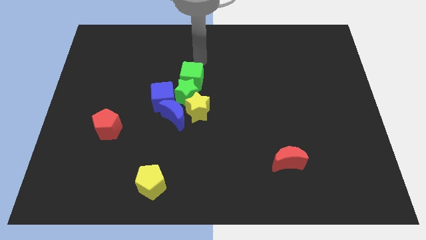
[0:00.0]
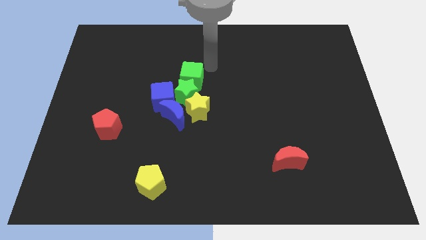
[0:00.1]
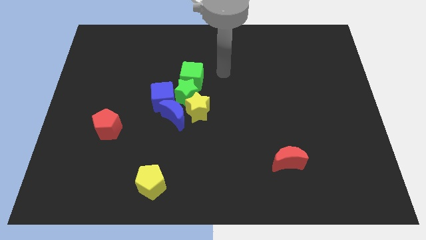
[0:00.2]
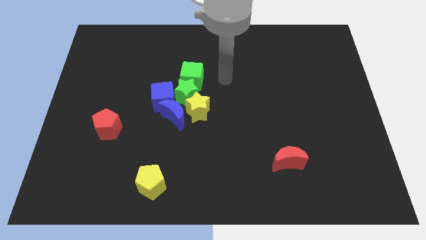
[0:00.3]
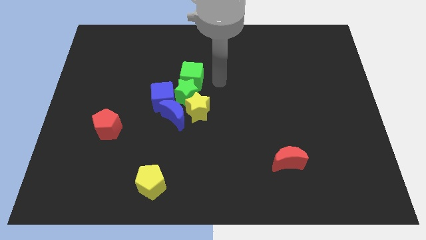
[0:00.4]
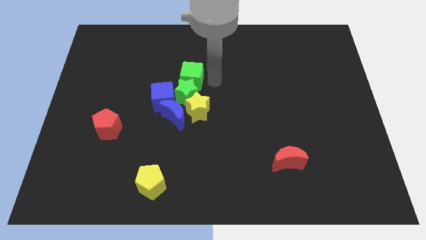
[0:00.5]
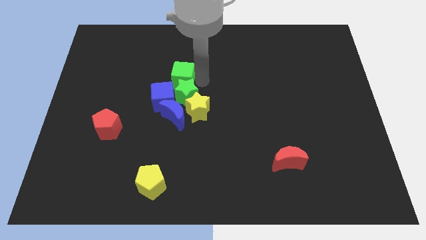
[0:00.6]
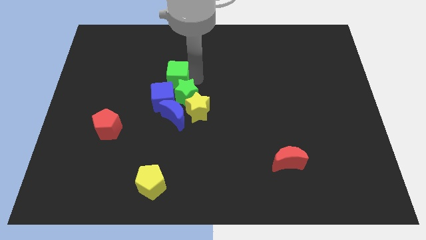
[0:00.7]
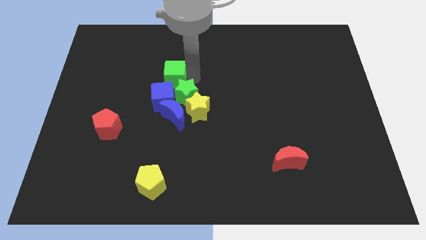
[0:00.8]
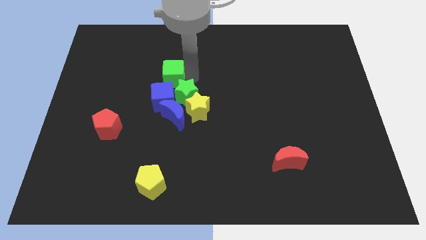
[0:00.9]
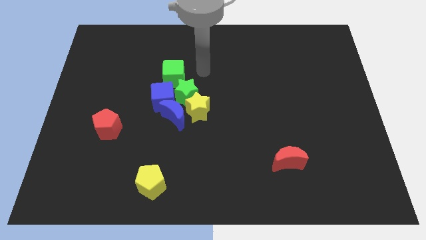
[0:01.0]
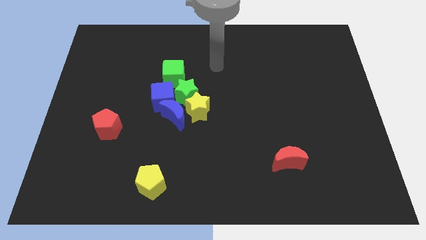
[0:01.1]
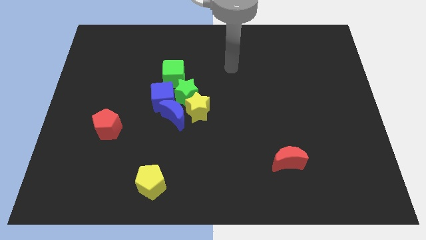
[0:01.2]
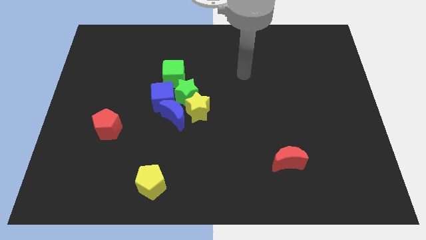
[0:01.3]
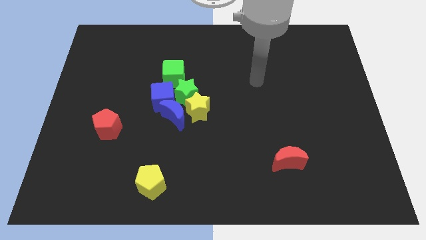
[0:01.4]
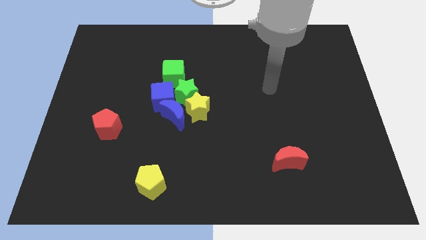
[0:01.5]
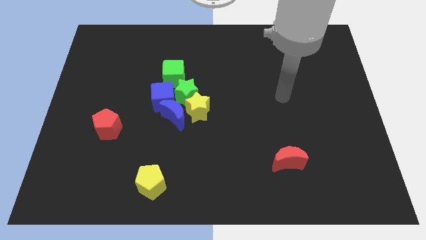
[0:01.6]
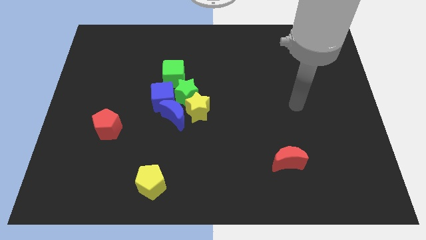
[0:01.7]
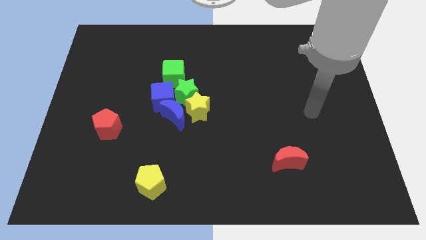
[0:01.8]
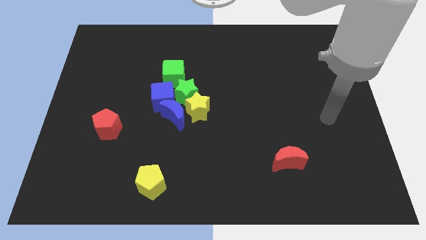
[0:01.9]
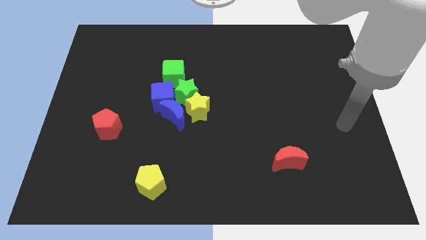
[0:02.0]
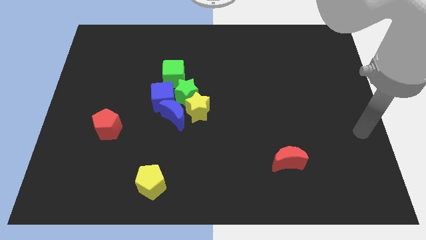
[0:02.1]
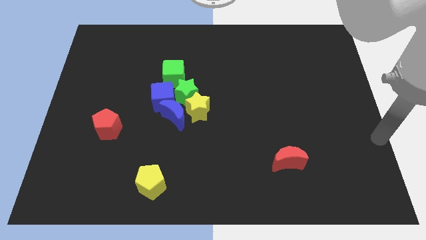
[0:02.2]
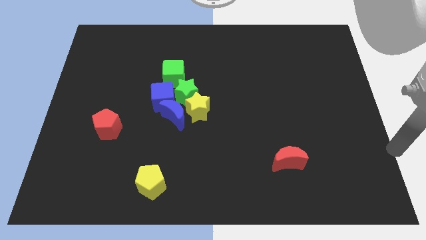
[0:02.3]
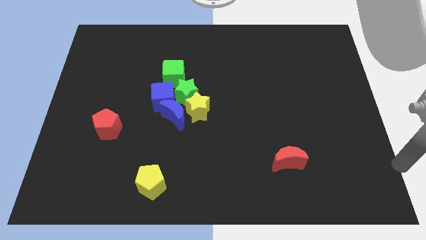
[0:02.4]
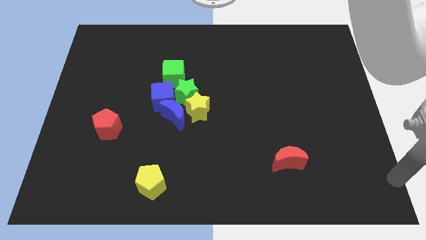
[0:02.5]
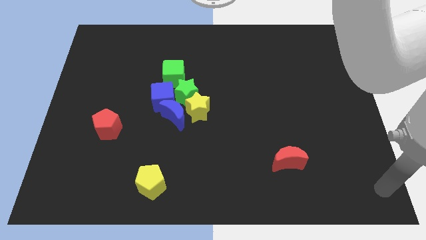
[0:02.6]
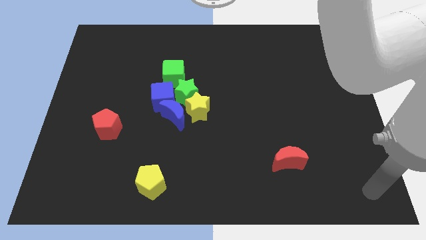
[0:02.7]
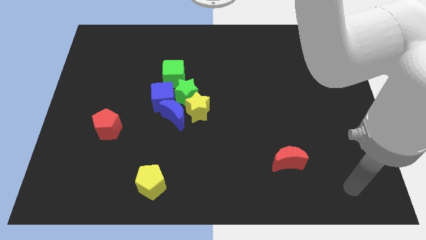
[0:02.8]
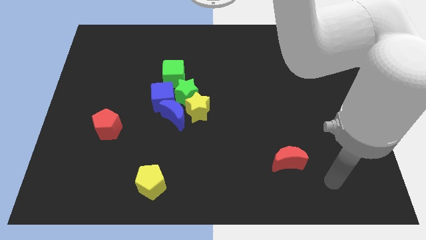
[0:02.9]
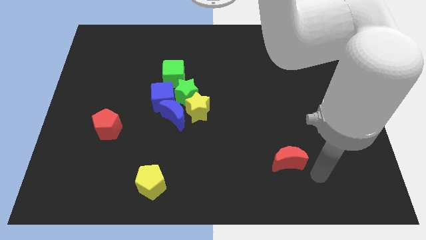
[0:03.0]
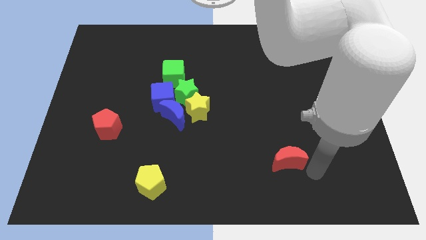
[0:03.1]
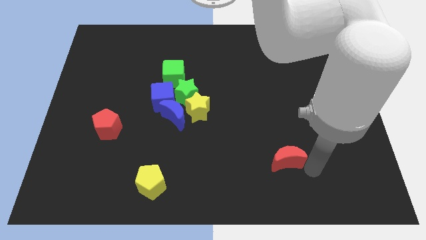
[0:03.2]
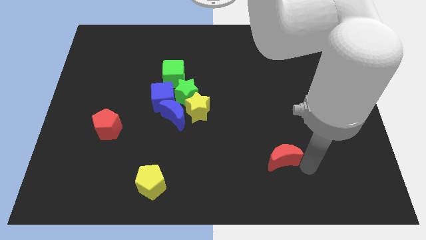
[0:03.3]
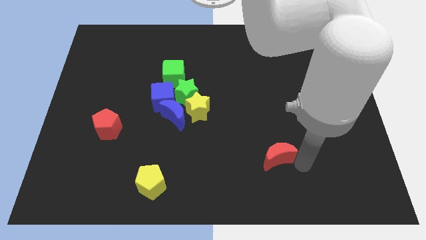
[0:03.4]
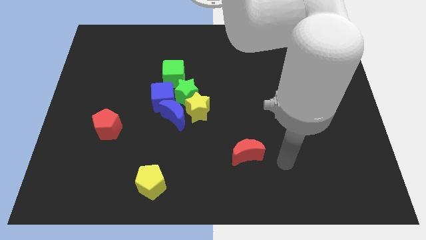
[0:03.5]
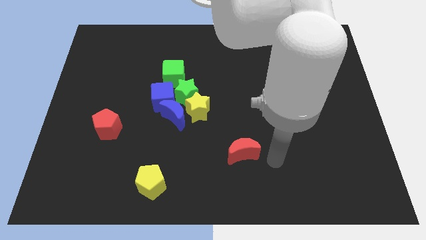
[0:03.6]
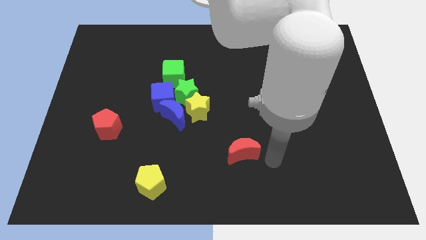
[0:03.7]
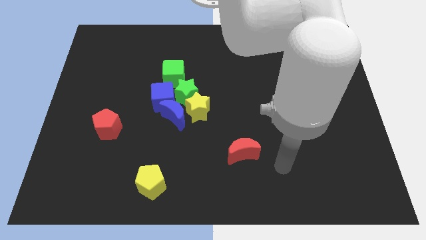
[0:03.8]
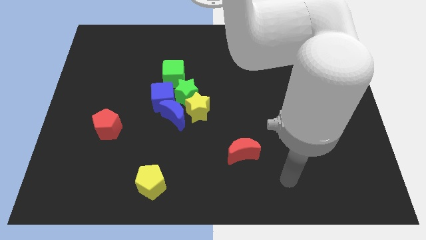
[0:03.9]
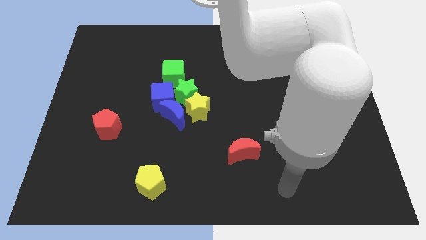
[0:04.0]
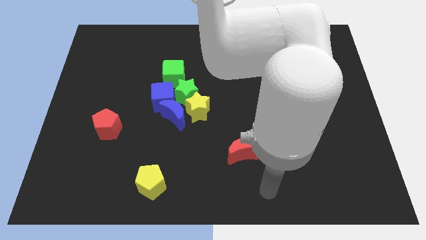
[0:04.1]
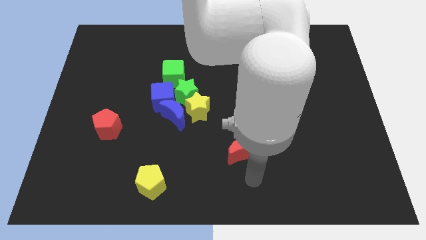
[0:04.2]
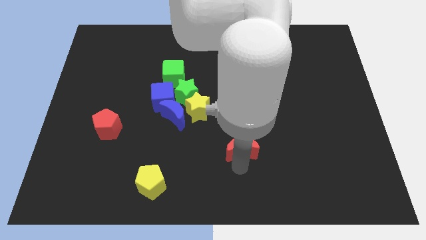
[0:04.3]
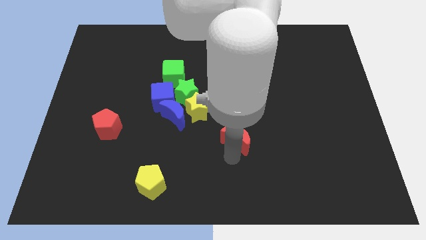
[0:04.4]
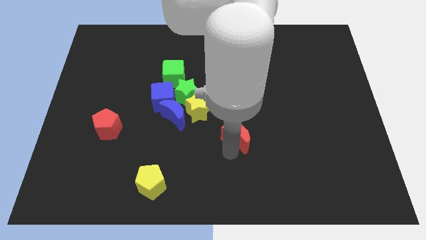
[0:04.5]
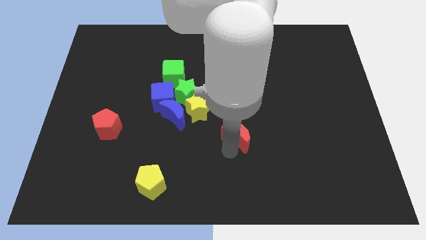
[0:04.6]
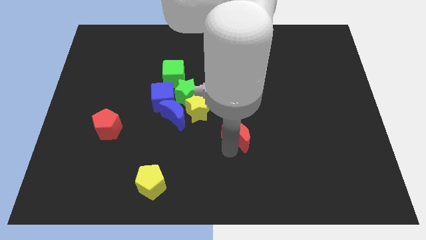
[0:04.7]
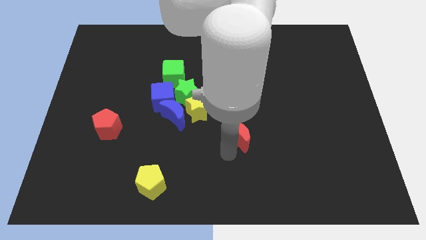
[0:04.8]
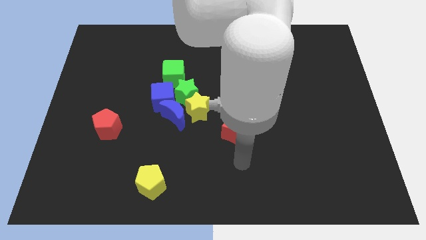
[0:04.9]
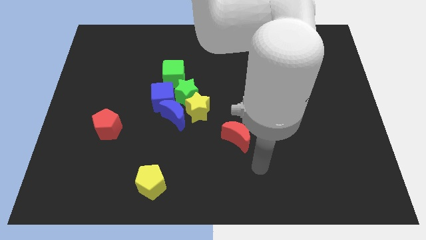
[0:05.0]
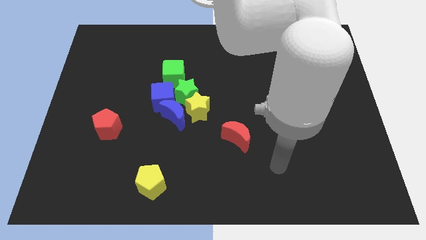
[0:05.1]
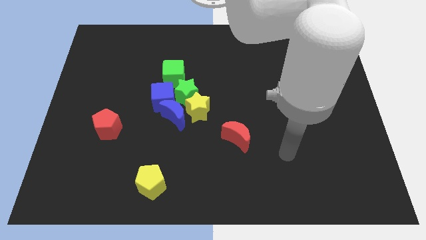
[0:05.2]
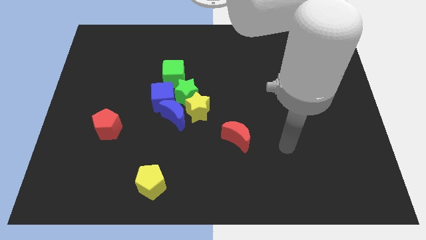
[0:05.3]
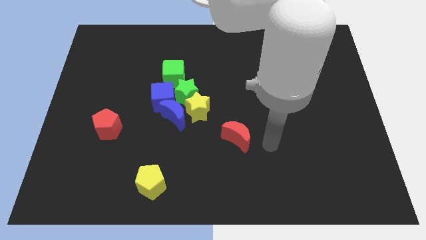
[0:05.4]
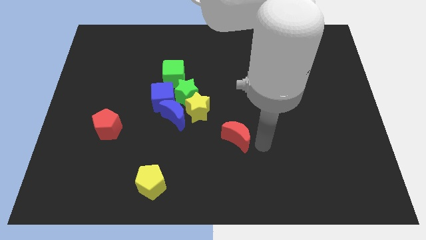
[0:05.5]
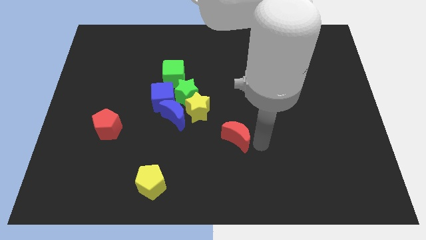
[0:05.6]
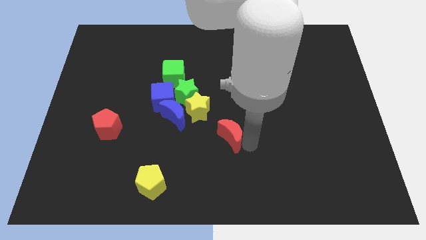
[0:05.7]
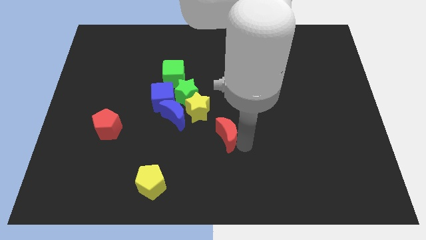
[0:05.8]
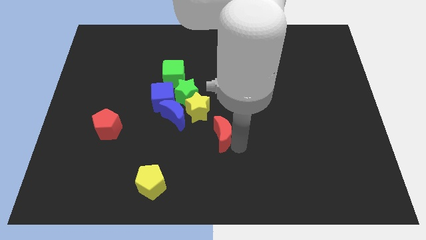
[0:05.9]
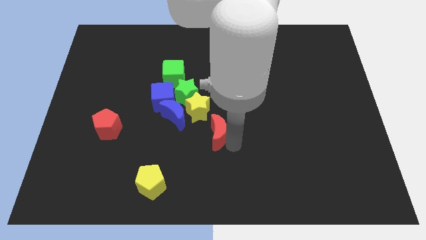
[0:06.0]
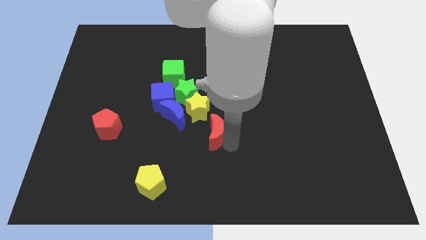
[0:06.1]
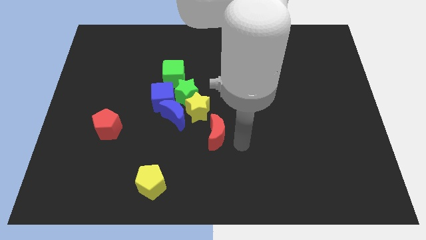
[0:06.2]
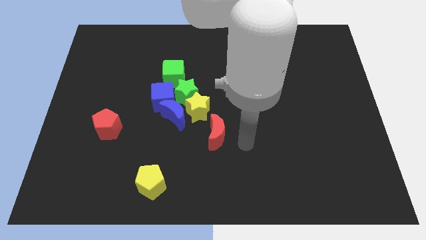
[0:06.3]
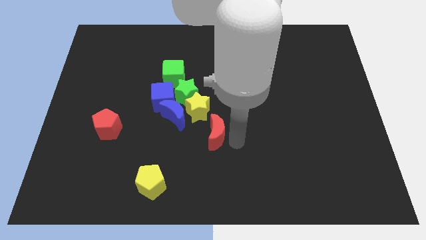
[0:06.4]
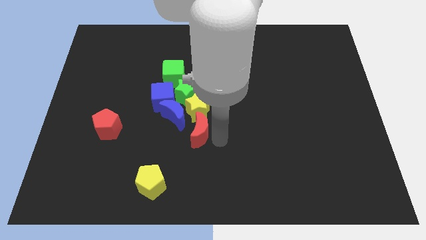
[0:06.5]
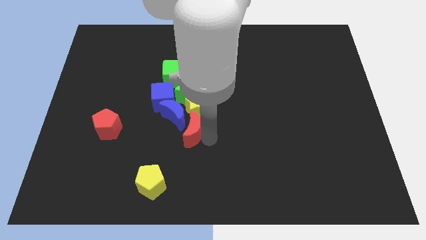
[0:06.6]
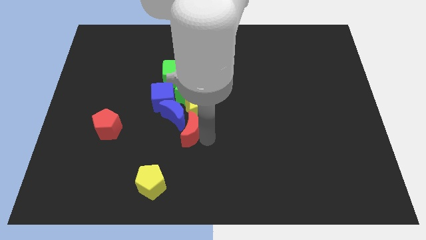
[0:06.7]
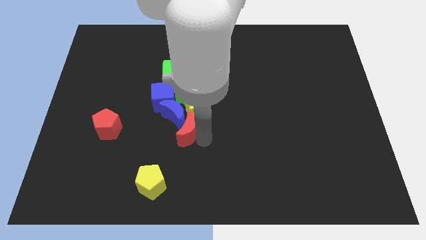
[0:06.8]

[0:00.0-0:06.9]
move the red moon below the blue moon

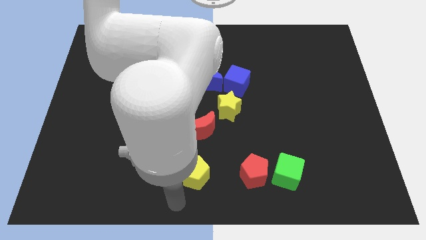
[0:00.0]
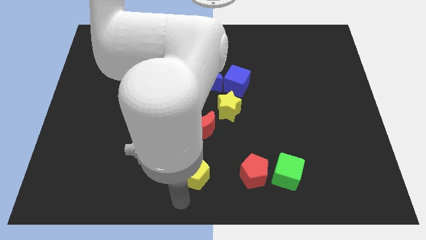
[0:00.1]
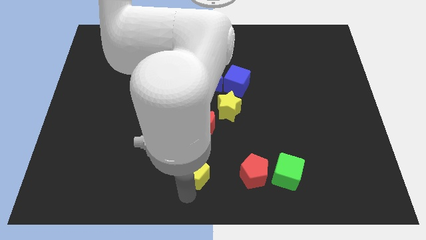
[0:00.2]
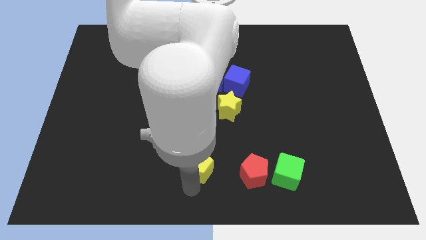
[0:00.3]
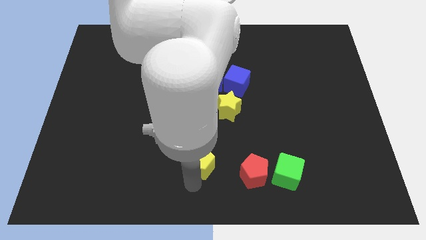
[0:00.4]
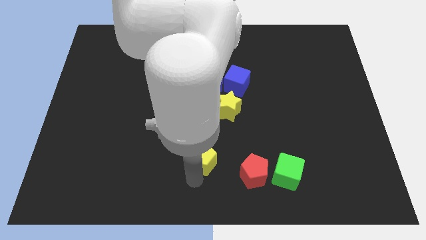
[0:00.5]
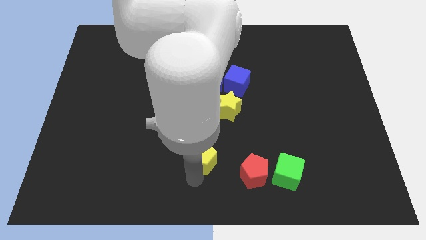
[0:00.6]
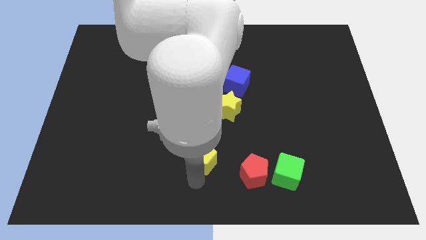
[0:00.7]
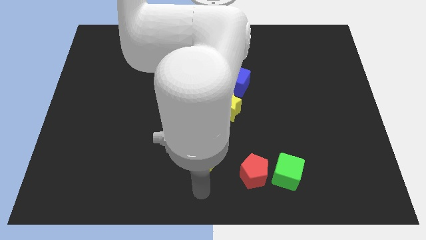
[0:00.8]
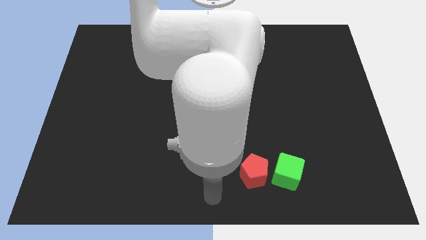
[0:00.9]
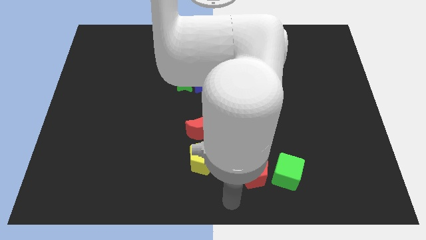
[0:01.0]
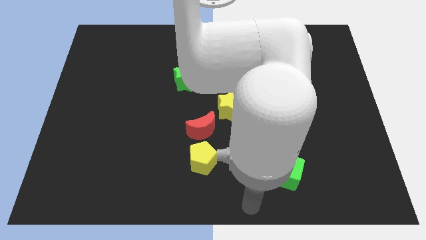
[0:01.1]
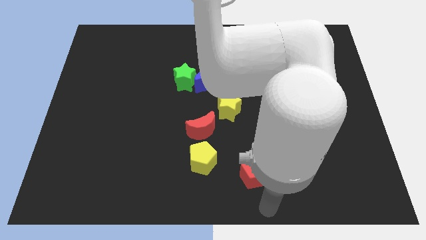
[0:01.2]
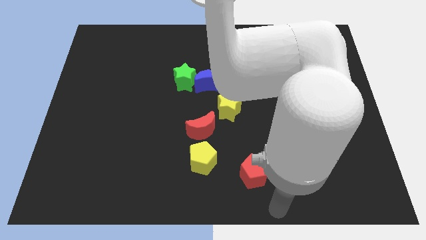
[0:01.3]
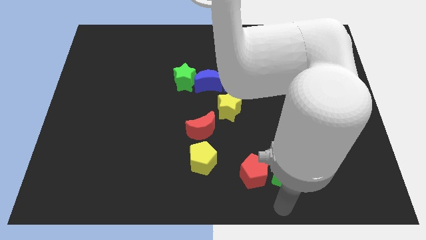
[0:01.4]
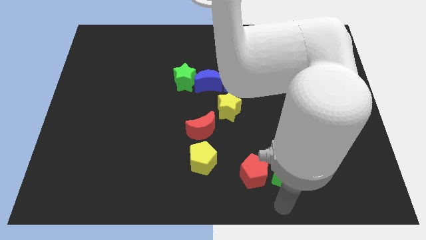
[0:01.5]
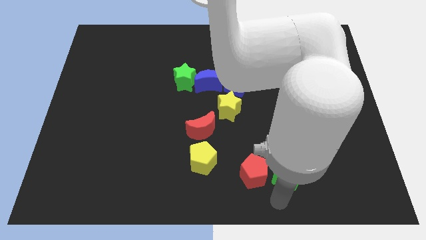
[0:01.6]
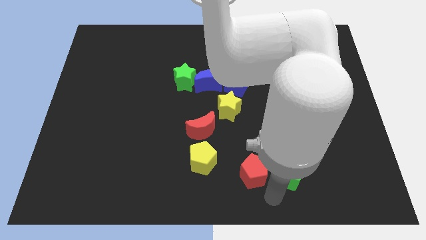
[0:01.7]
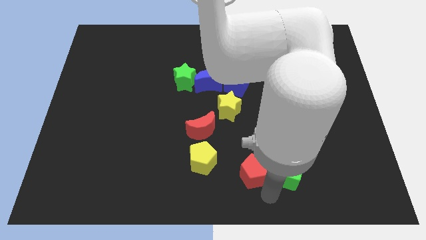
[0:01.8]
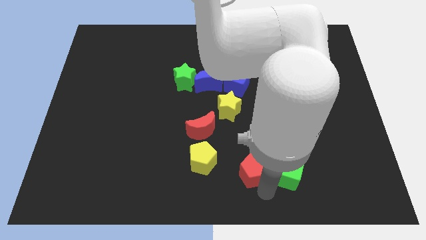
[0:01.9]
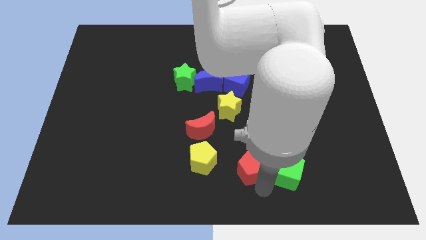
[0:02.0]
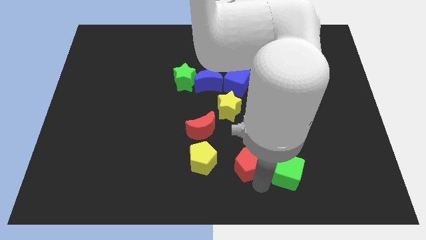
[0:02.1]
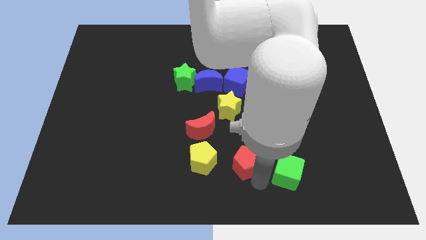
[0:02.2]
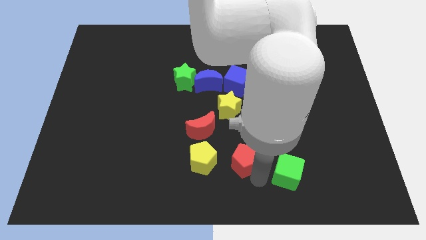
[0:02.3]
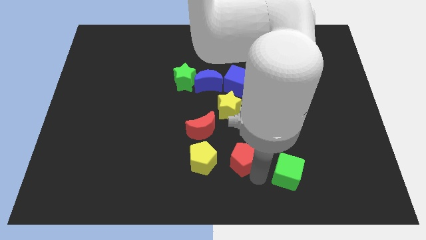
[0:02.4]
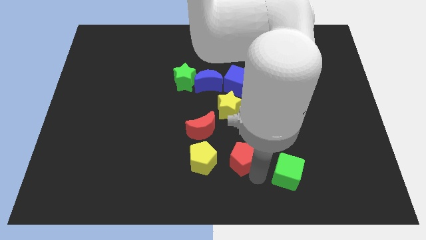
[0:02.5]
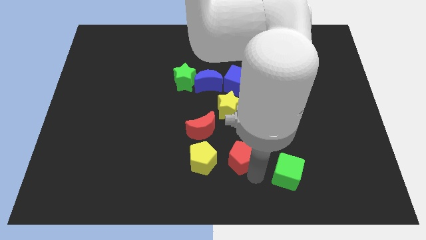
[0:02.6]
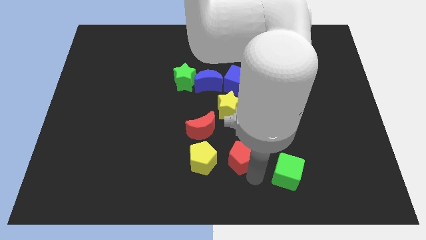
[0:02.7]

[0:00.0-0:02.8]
place green cube beside red pentagon
